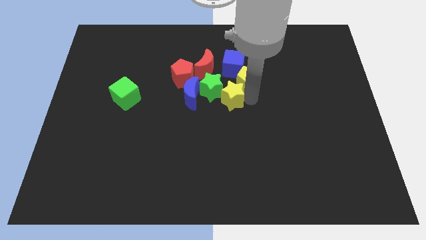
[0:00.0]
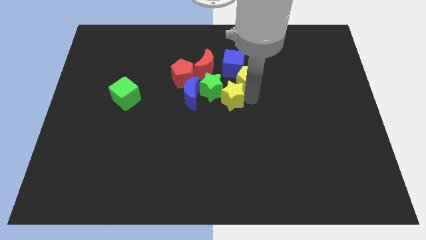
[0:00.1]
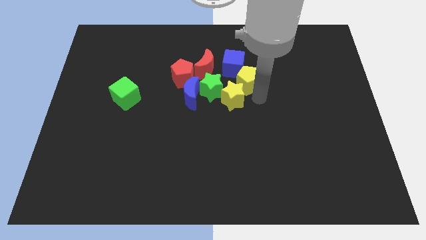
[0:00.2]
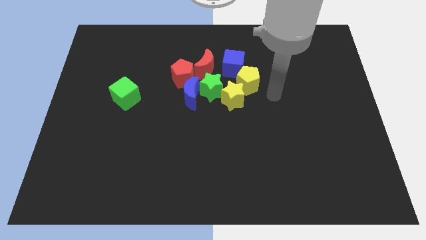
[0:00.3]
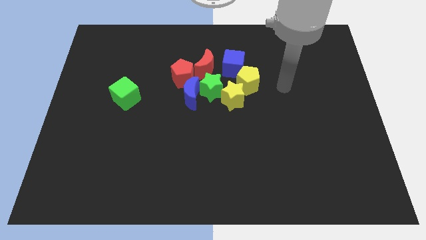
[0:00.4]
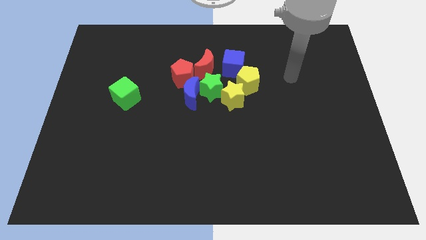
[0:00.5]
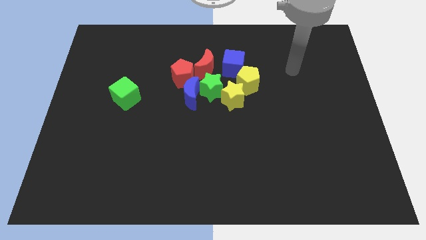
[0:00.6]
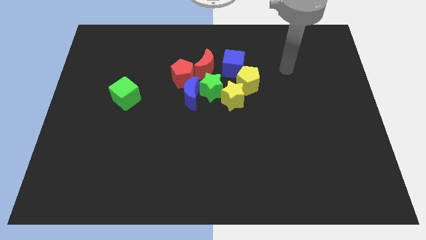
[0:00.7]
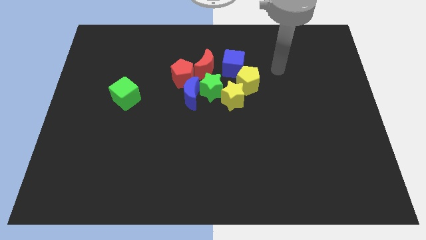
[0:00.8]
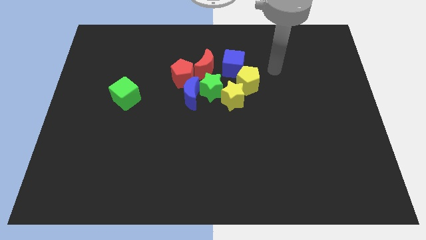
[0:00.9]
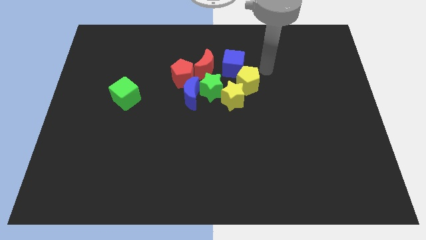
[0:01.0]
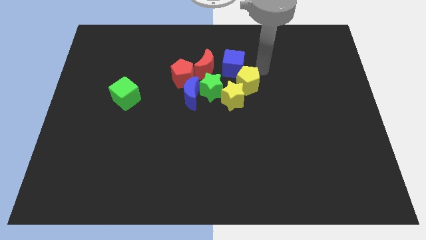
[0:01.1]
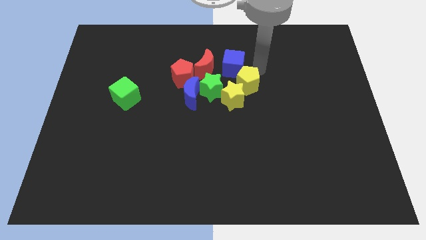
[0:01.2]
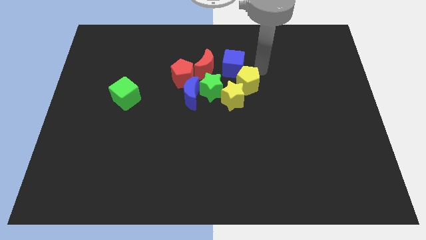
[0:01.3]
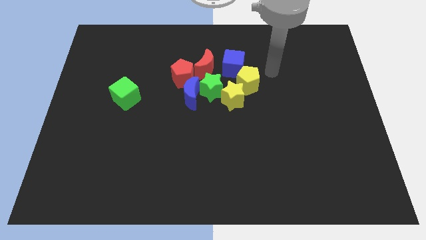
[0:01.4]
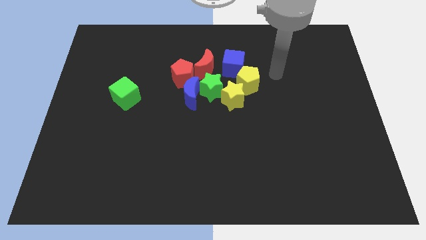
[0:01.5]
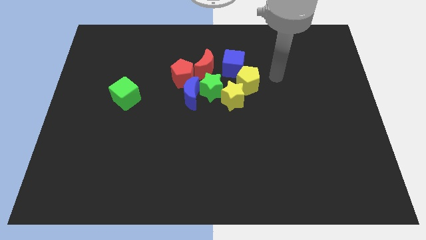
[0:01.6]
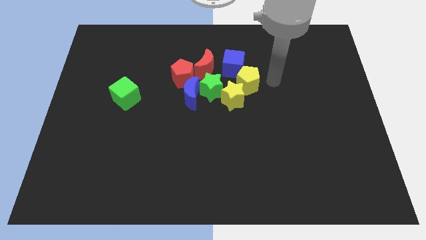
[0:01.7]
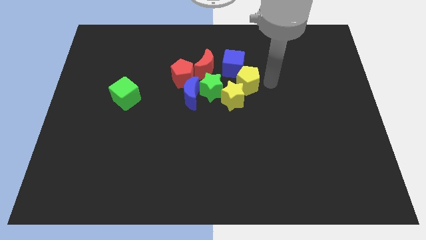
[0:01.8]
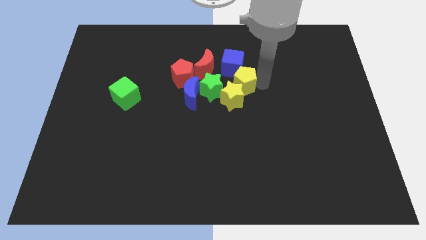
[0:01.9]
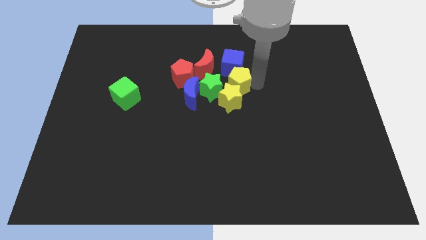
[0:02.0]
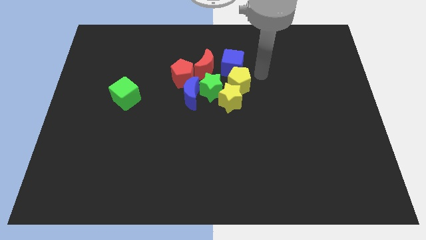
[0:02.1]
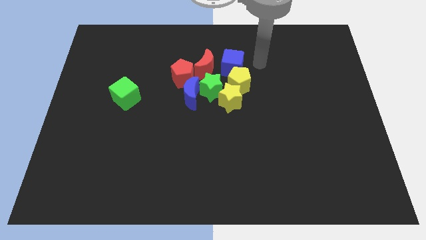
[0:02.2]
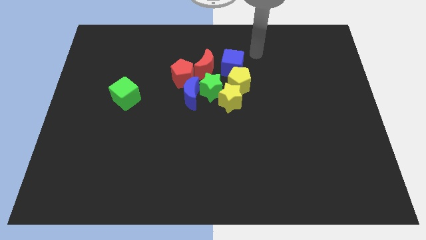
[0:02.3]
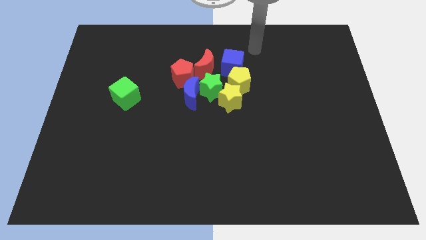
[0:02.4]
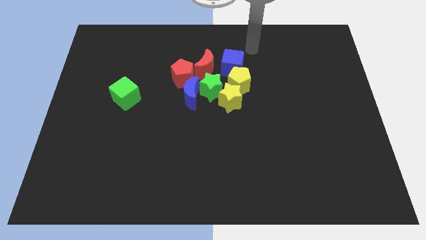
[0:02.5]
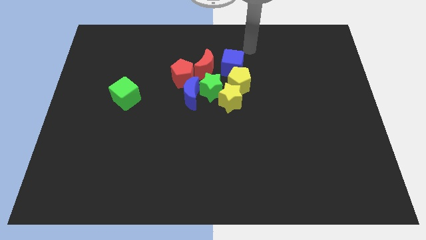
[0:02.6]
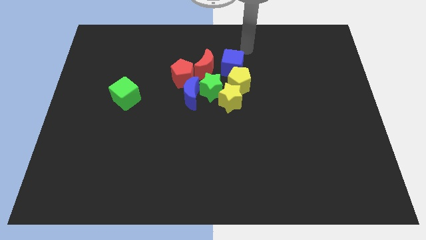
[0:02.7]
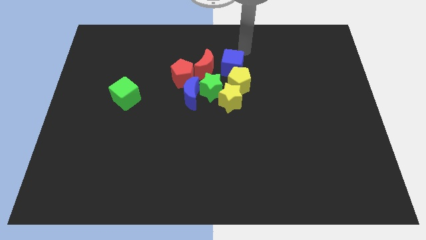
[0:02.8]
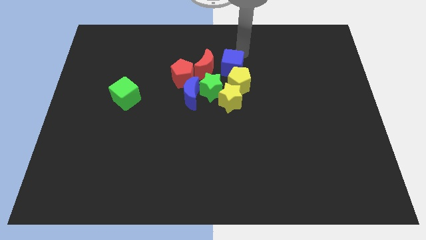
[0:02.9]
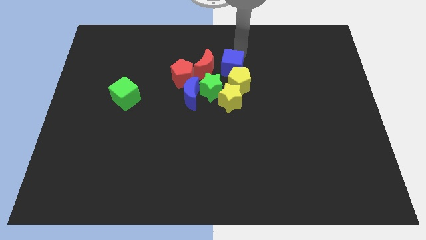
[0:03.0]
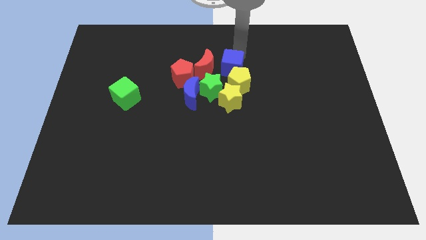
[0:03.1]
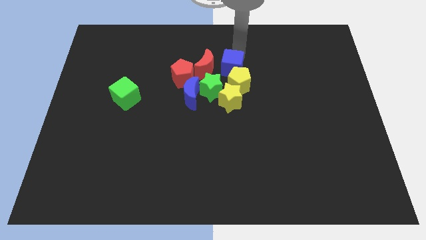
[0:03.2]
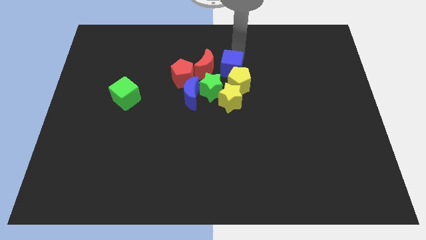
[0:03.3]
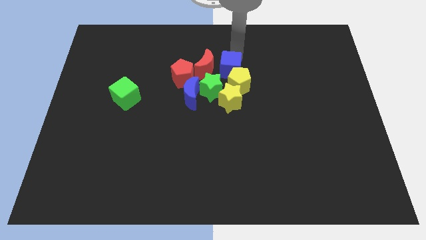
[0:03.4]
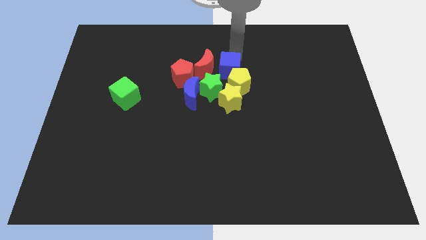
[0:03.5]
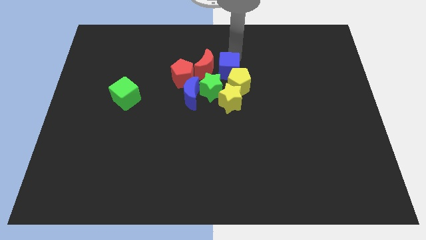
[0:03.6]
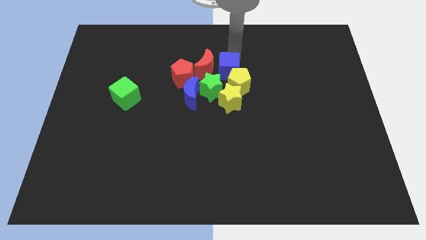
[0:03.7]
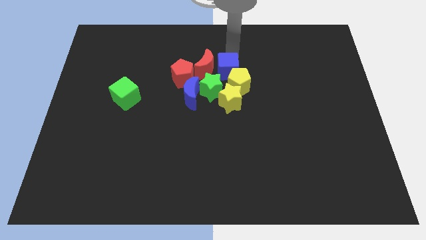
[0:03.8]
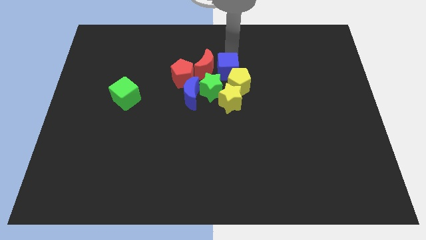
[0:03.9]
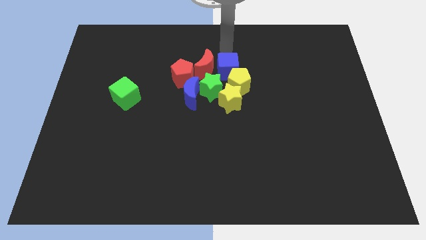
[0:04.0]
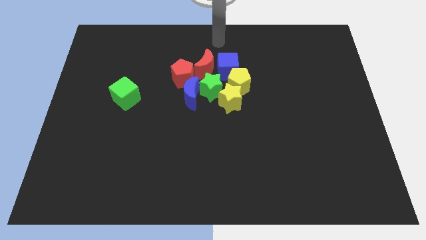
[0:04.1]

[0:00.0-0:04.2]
move away from the yellow pentagon

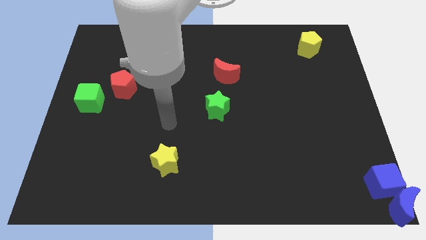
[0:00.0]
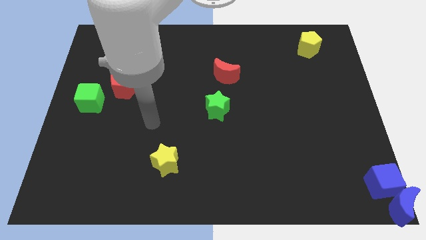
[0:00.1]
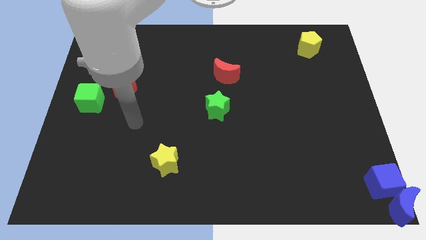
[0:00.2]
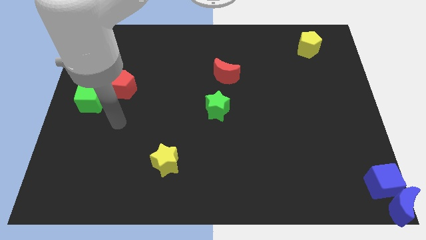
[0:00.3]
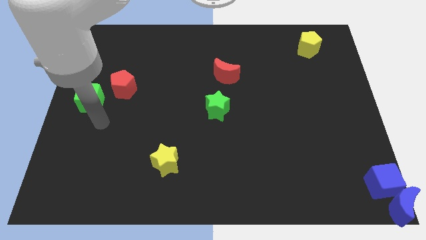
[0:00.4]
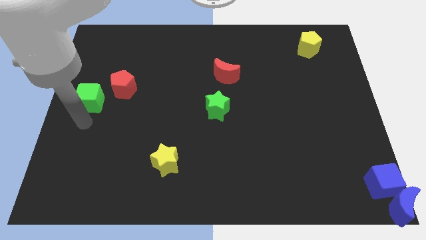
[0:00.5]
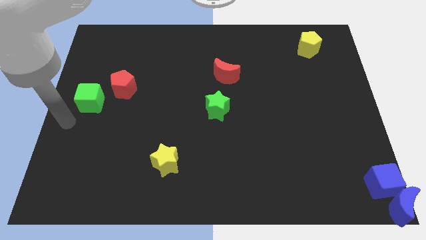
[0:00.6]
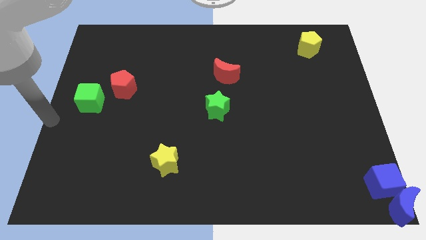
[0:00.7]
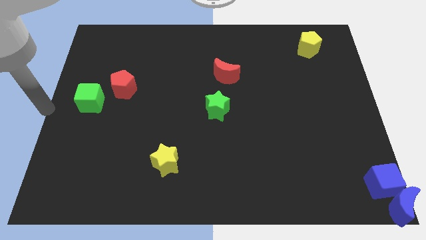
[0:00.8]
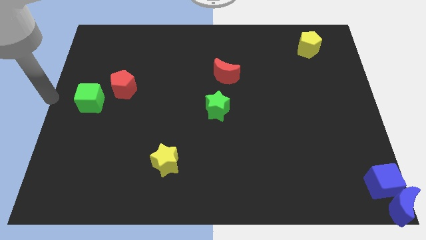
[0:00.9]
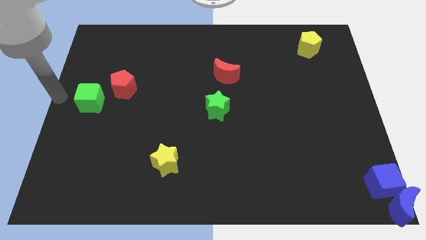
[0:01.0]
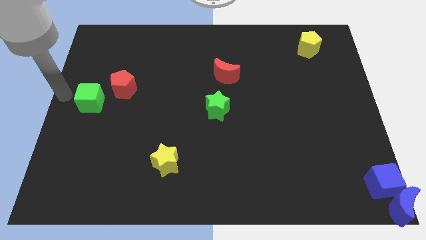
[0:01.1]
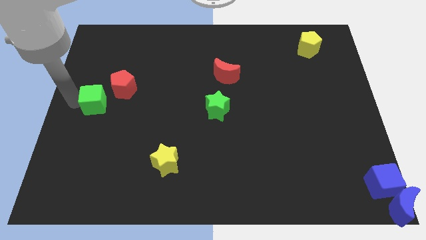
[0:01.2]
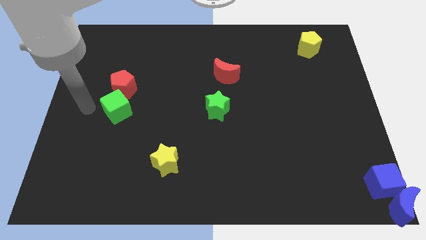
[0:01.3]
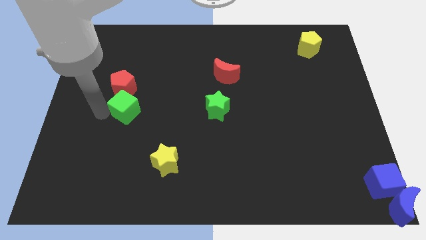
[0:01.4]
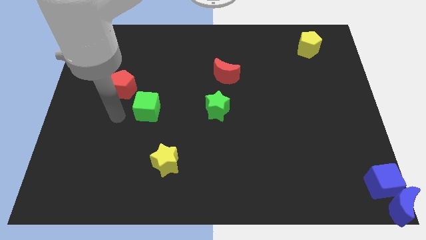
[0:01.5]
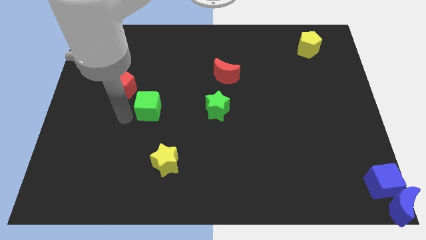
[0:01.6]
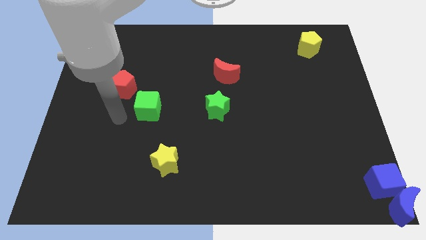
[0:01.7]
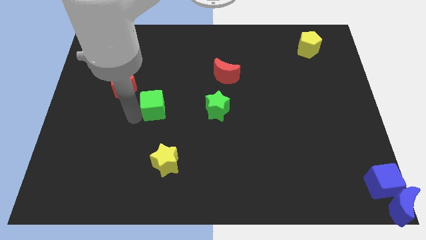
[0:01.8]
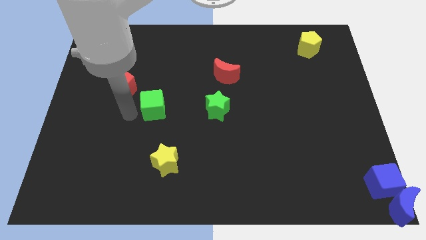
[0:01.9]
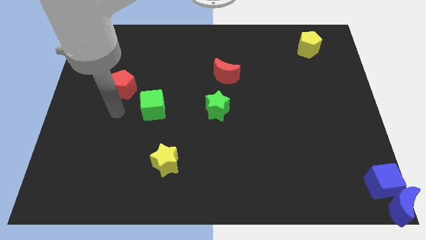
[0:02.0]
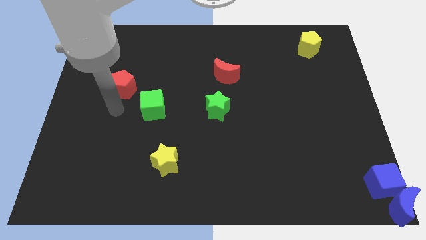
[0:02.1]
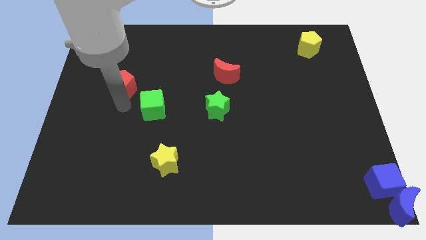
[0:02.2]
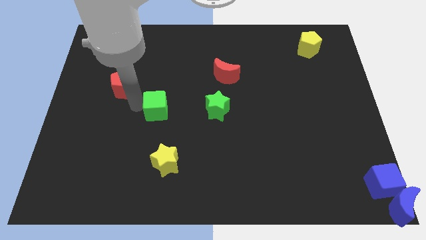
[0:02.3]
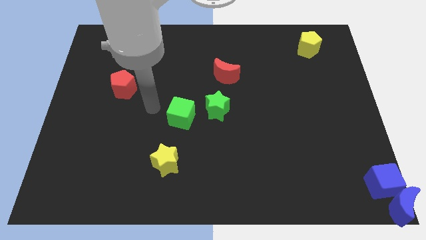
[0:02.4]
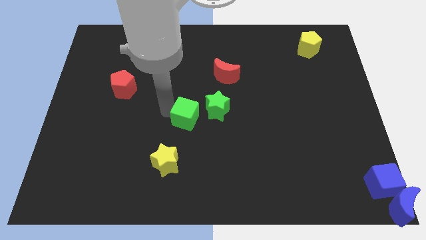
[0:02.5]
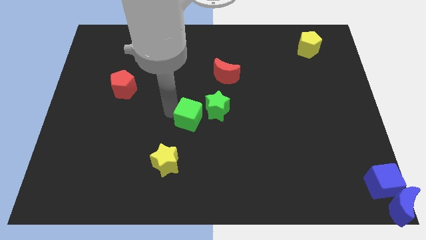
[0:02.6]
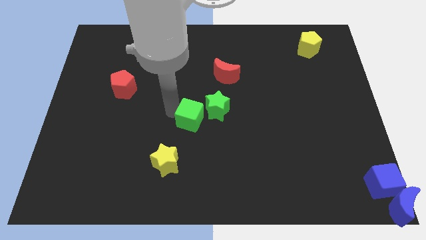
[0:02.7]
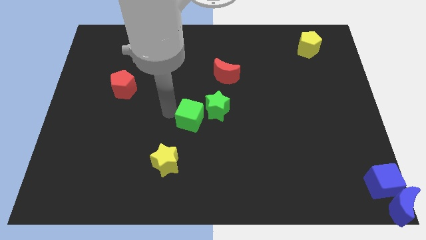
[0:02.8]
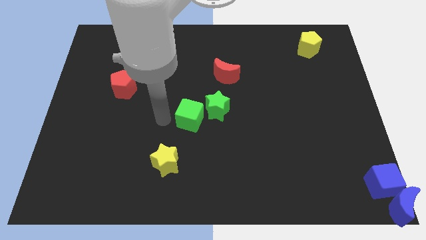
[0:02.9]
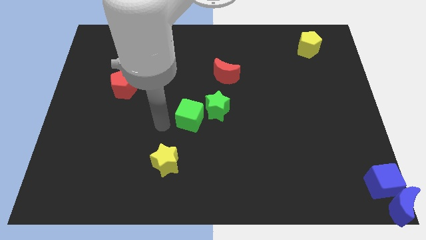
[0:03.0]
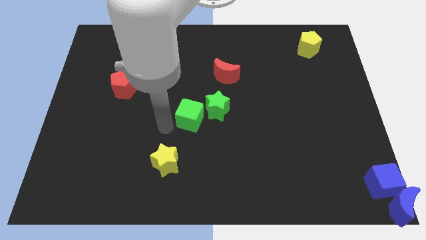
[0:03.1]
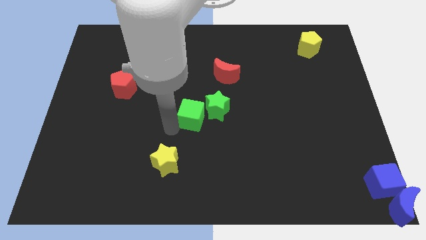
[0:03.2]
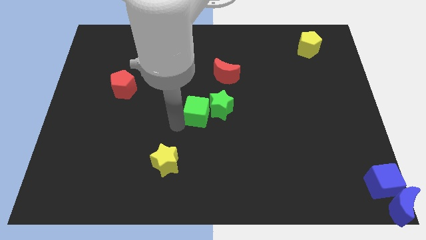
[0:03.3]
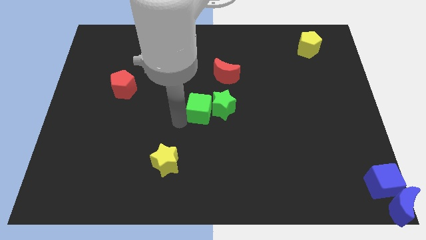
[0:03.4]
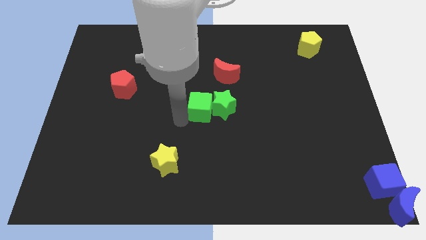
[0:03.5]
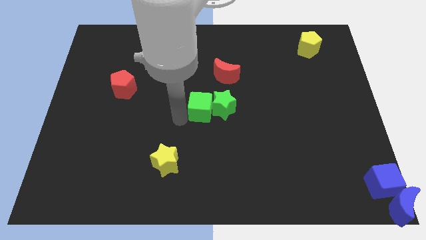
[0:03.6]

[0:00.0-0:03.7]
slide the green cube into the green star

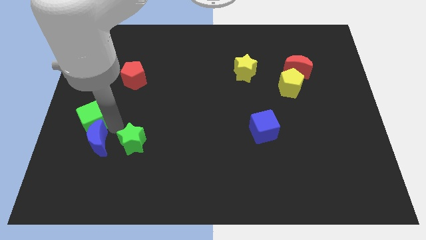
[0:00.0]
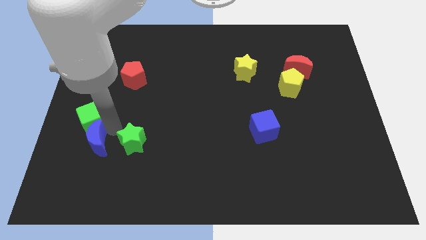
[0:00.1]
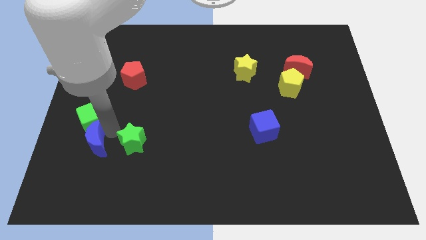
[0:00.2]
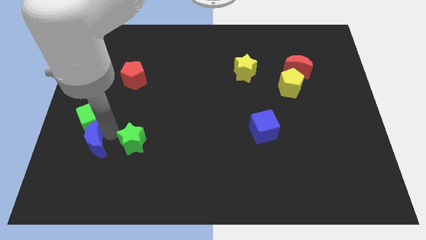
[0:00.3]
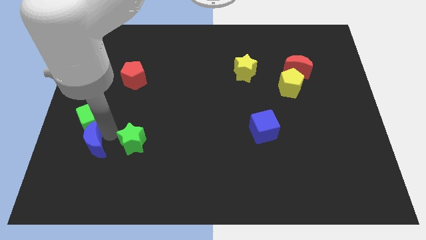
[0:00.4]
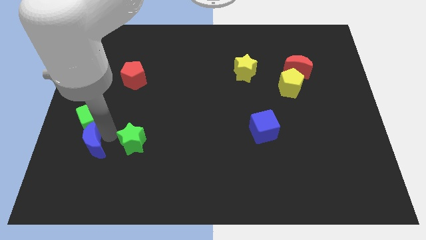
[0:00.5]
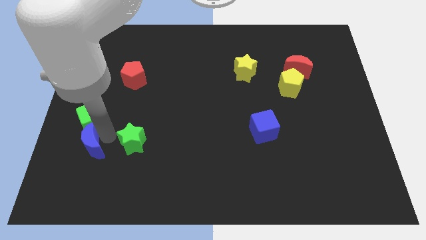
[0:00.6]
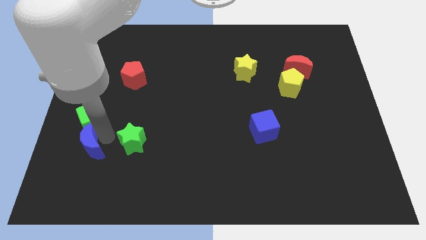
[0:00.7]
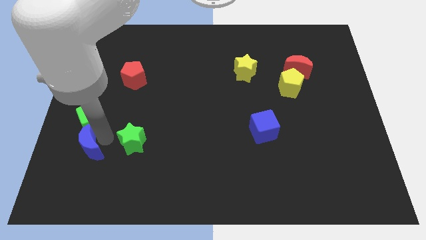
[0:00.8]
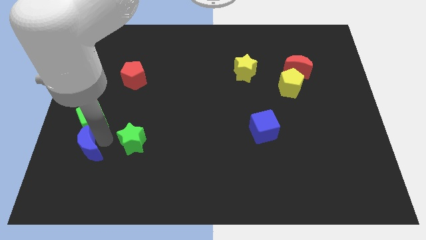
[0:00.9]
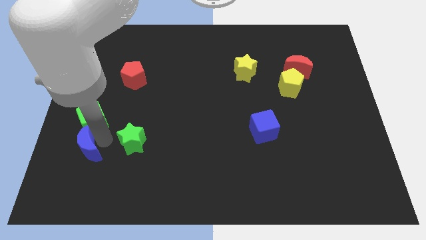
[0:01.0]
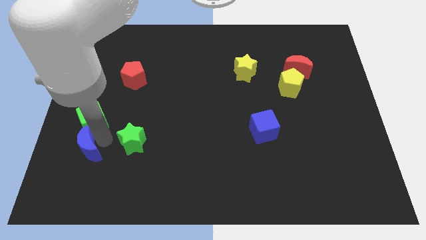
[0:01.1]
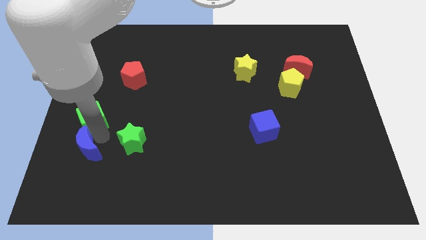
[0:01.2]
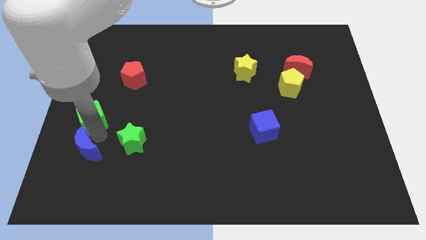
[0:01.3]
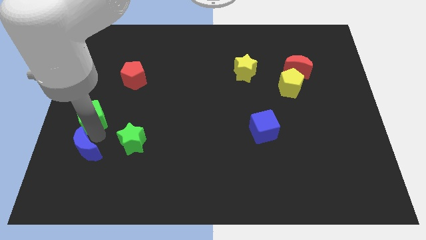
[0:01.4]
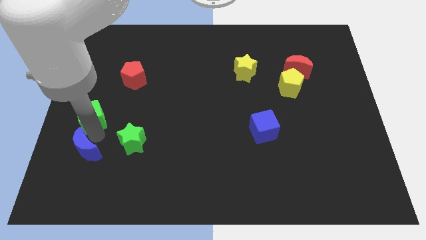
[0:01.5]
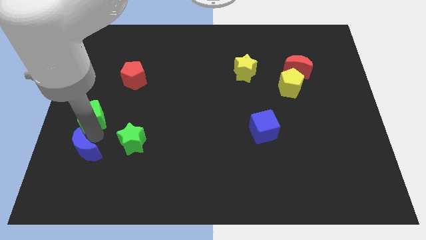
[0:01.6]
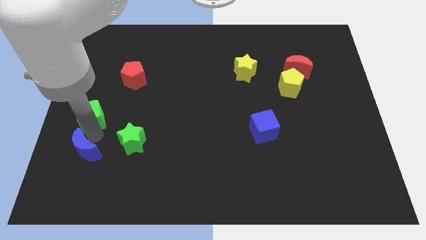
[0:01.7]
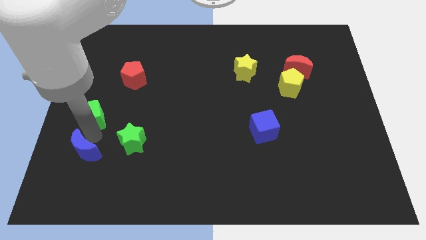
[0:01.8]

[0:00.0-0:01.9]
separate the green cube and the blue moon
